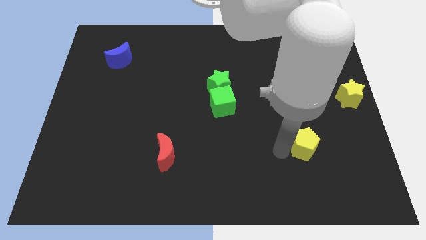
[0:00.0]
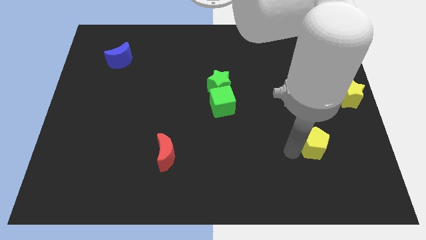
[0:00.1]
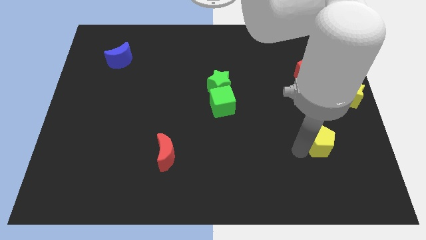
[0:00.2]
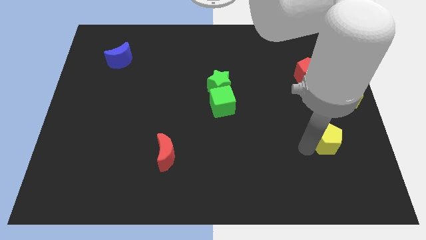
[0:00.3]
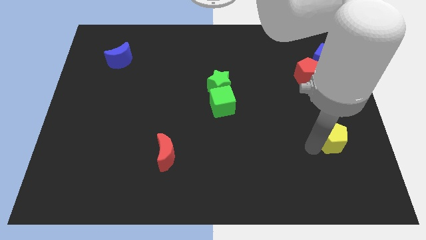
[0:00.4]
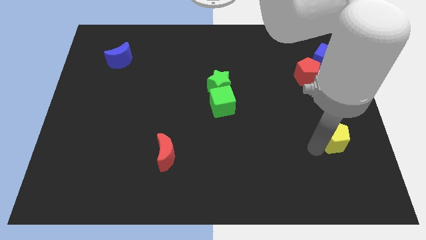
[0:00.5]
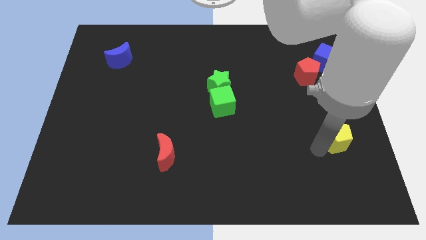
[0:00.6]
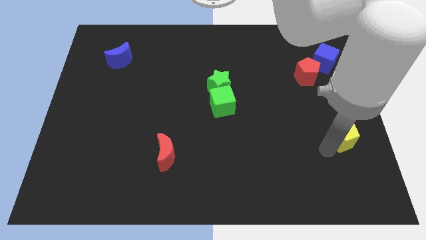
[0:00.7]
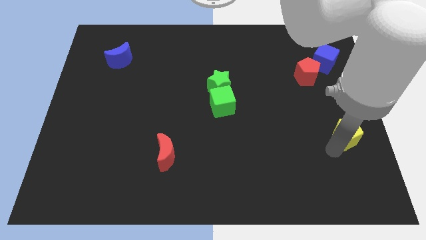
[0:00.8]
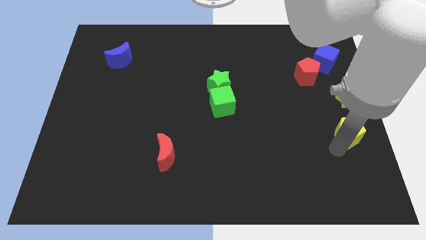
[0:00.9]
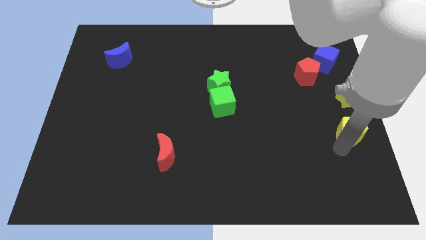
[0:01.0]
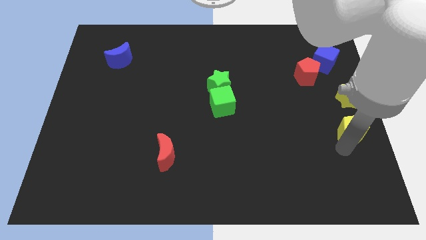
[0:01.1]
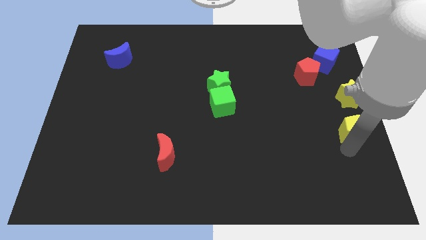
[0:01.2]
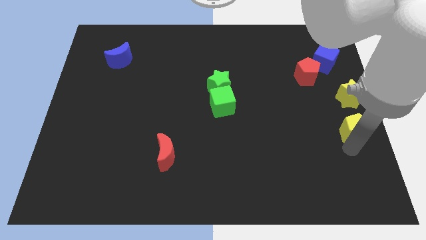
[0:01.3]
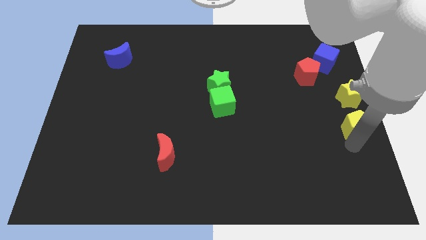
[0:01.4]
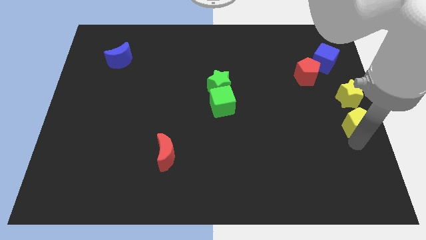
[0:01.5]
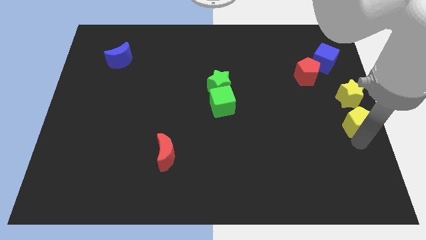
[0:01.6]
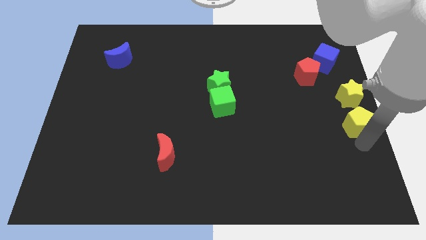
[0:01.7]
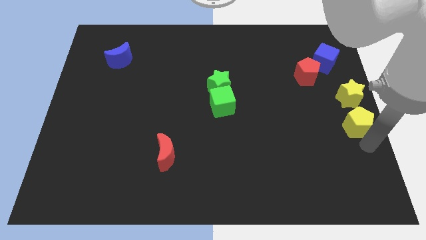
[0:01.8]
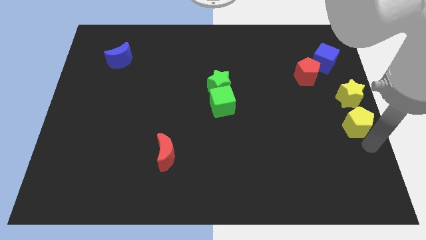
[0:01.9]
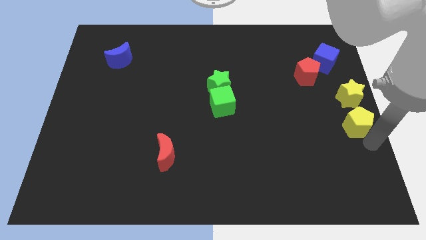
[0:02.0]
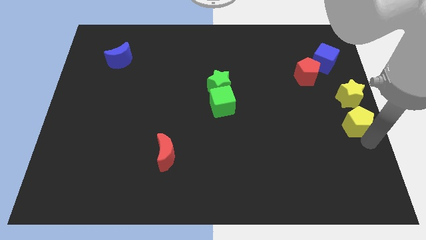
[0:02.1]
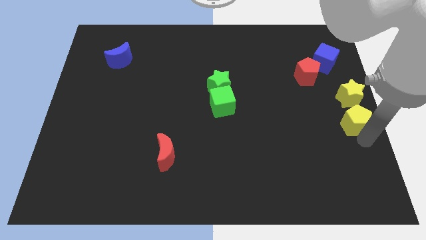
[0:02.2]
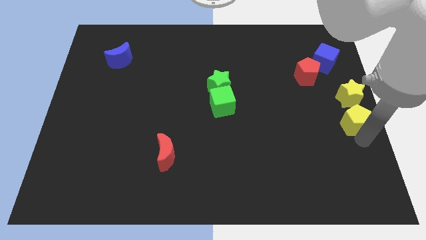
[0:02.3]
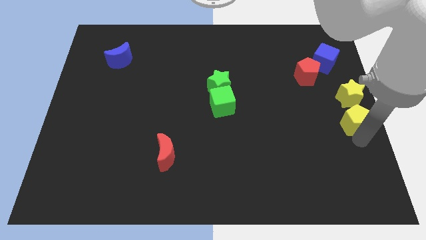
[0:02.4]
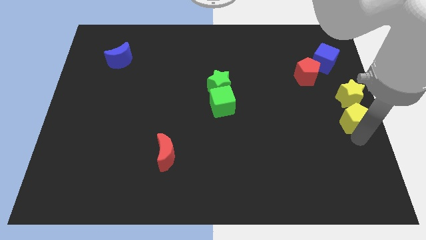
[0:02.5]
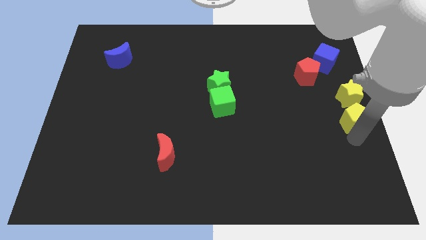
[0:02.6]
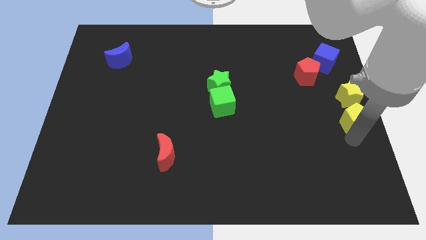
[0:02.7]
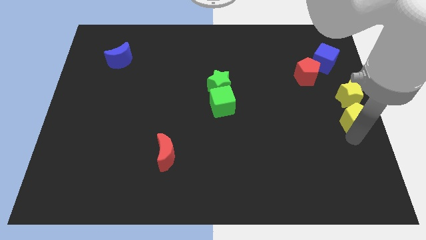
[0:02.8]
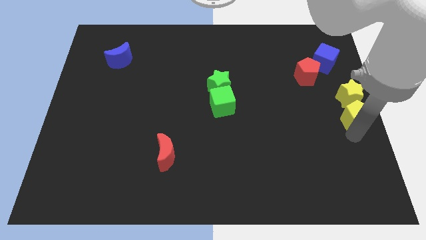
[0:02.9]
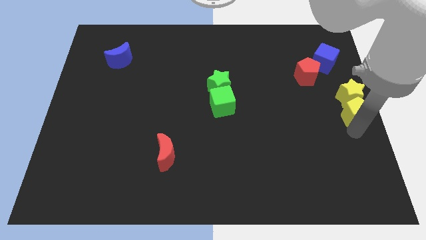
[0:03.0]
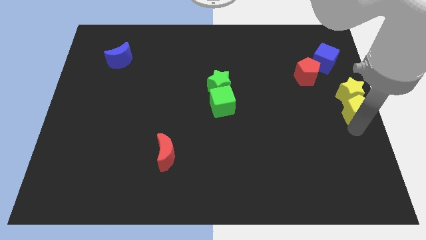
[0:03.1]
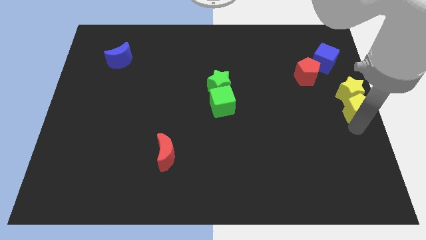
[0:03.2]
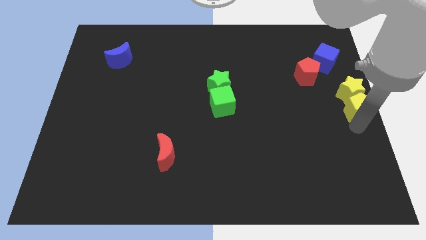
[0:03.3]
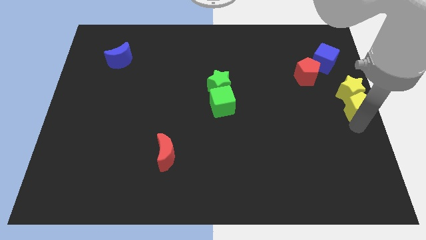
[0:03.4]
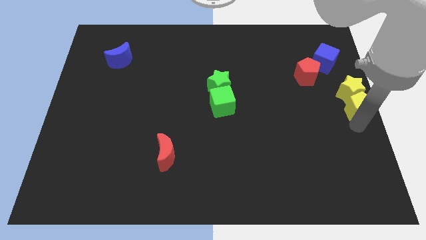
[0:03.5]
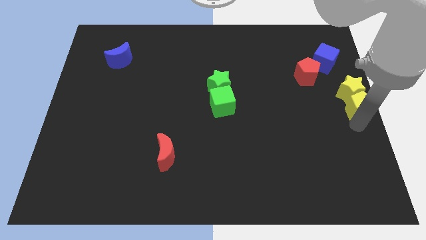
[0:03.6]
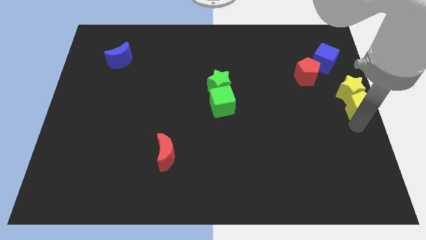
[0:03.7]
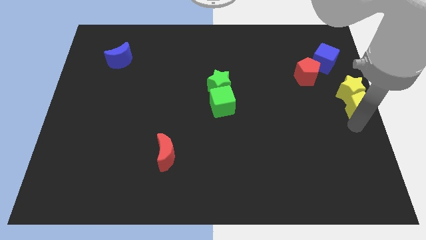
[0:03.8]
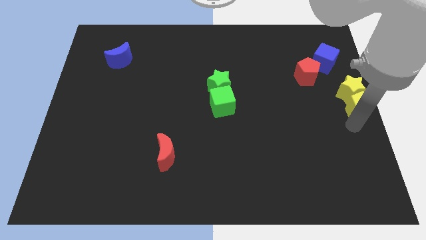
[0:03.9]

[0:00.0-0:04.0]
move yellow pentagon into yellow star

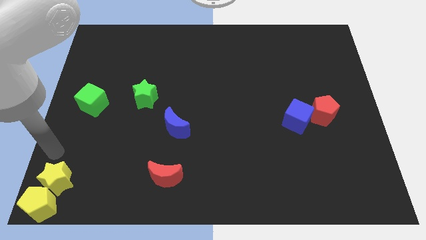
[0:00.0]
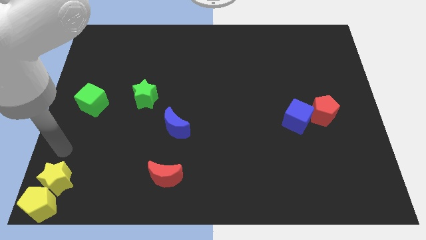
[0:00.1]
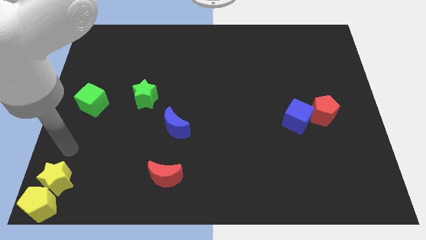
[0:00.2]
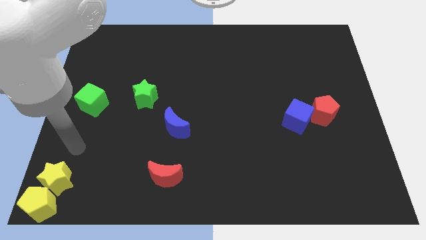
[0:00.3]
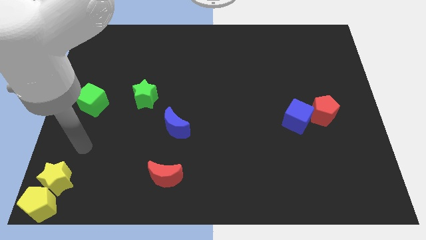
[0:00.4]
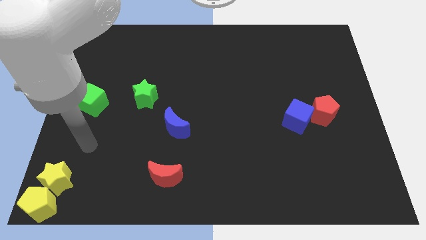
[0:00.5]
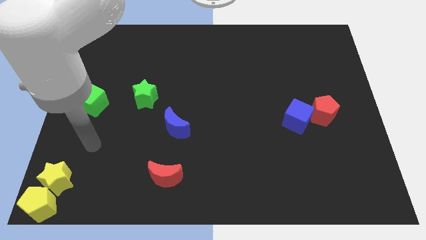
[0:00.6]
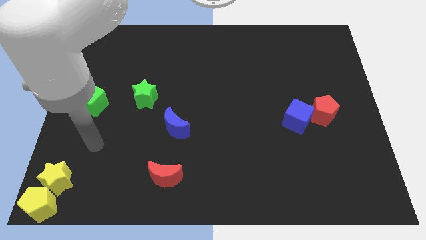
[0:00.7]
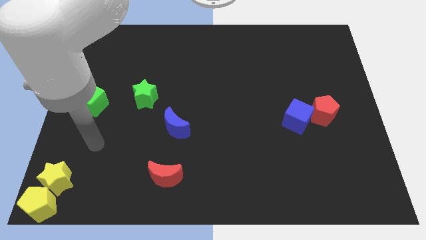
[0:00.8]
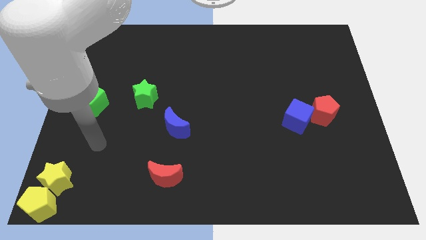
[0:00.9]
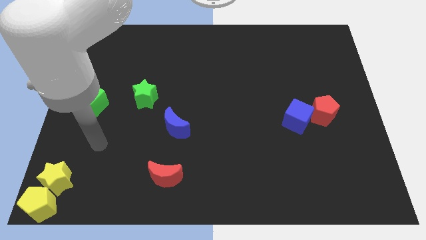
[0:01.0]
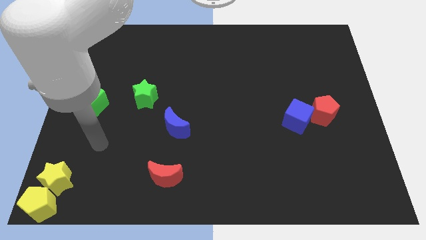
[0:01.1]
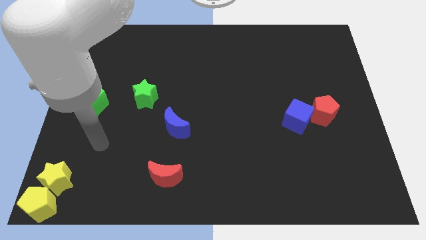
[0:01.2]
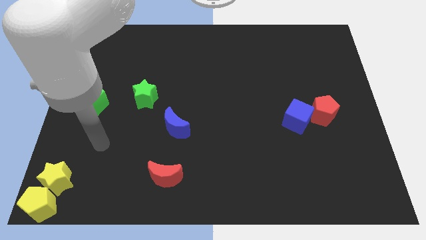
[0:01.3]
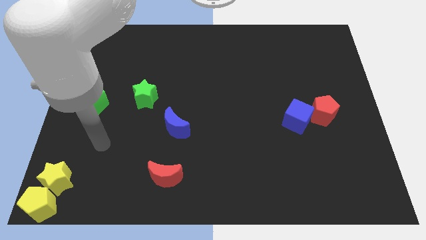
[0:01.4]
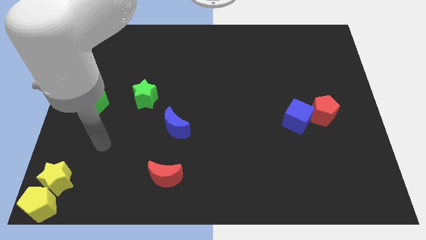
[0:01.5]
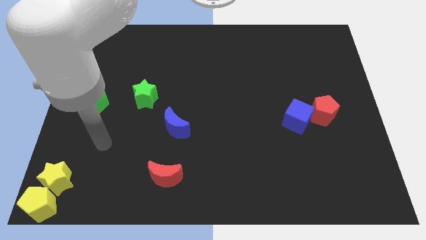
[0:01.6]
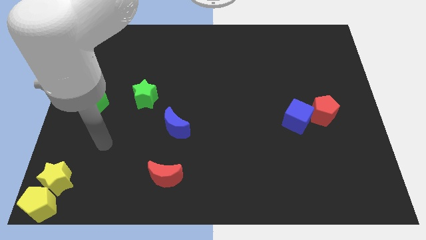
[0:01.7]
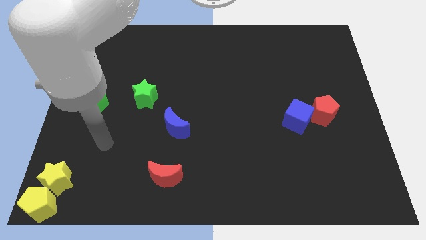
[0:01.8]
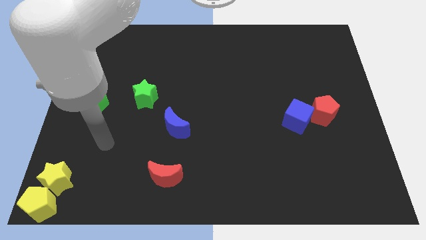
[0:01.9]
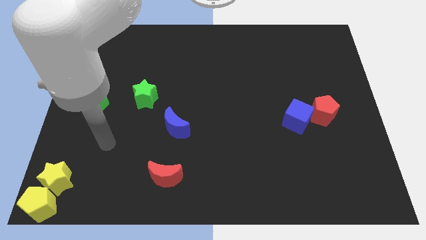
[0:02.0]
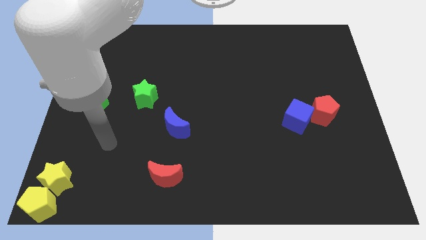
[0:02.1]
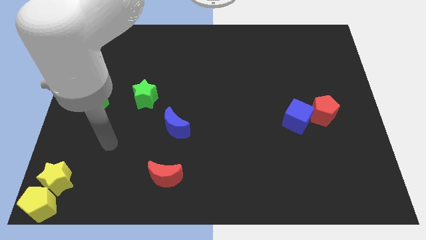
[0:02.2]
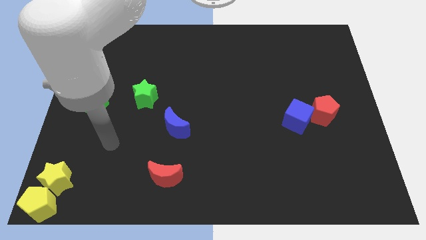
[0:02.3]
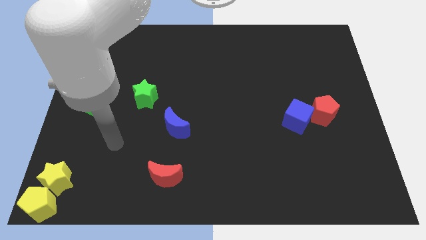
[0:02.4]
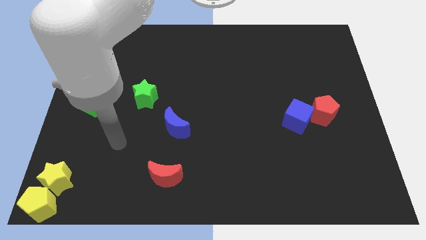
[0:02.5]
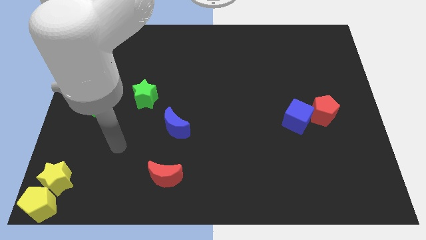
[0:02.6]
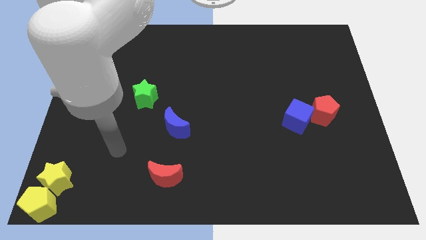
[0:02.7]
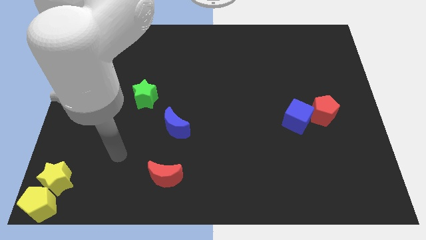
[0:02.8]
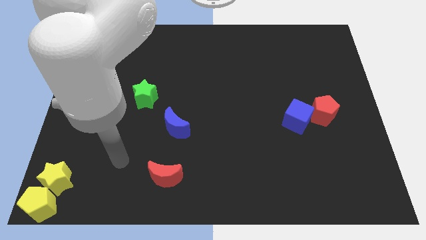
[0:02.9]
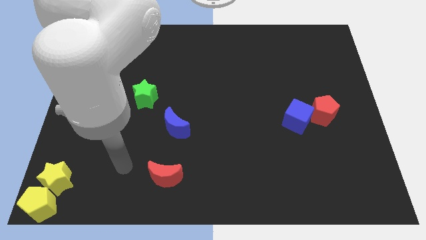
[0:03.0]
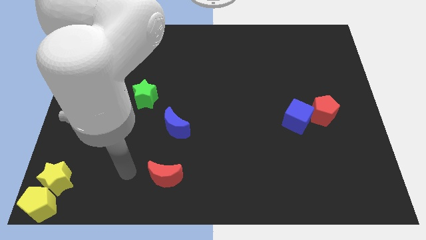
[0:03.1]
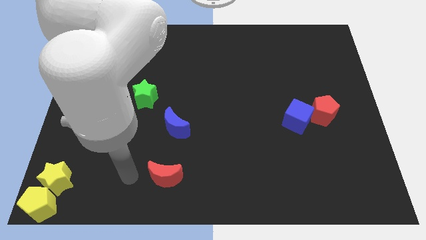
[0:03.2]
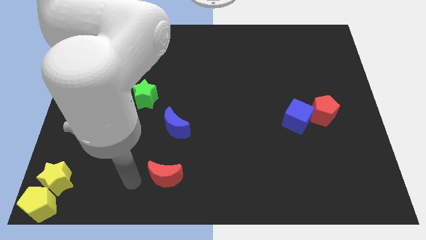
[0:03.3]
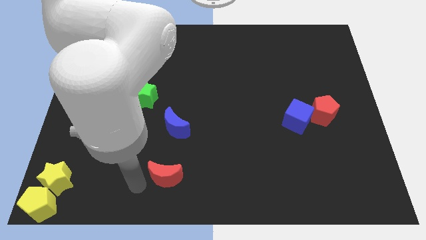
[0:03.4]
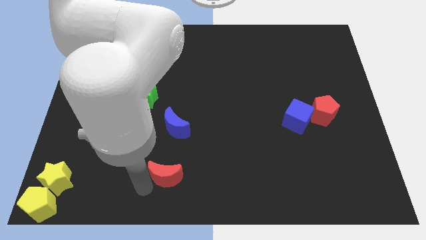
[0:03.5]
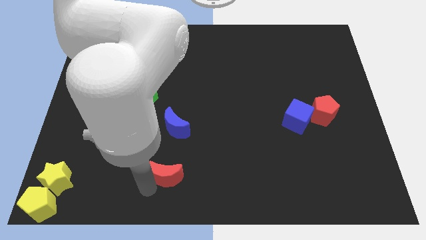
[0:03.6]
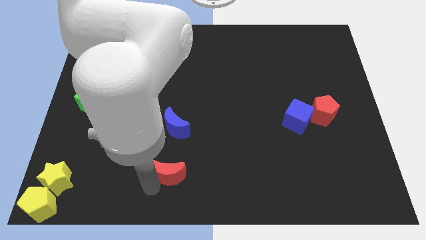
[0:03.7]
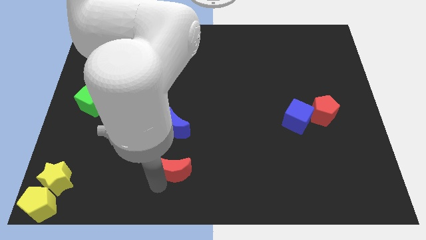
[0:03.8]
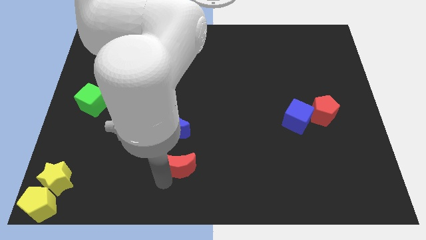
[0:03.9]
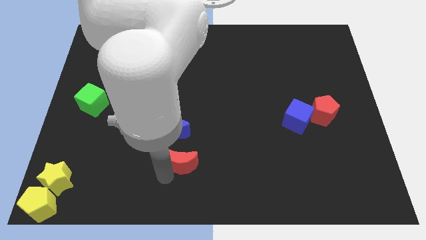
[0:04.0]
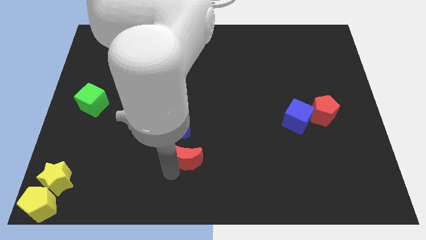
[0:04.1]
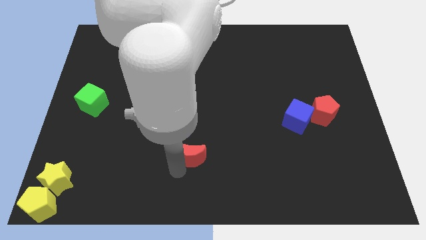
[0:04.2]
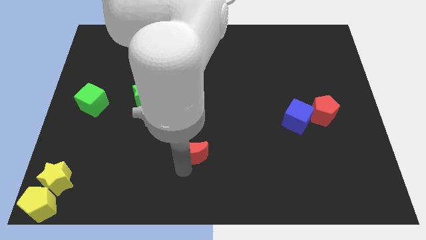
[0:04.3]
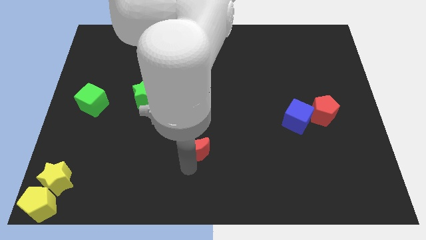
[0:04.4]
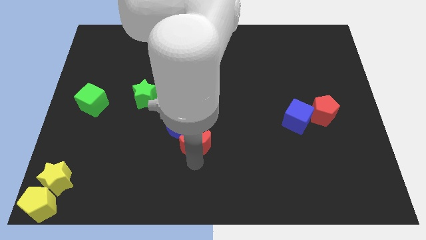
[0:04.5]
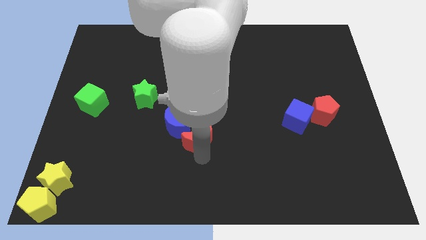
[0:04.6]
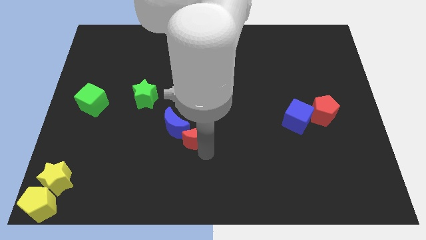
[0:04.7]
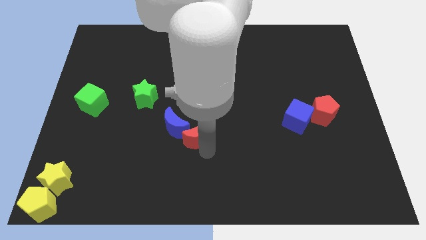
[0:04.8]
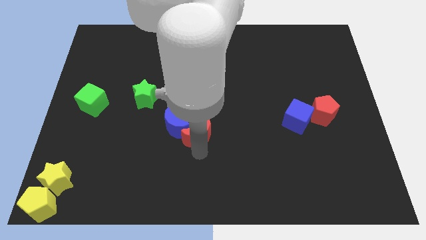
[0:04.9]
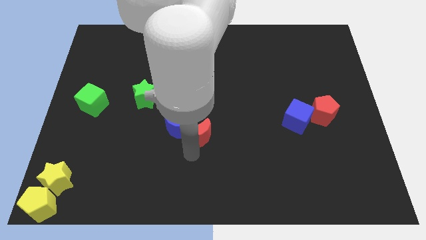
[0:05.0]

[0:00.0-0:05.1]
push the red crescent towards the blue crescent
